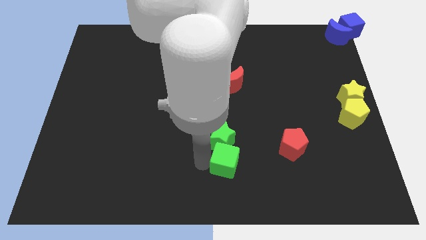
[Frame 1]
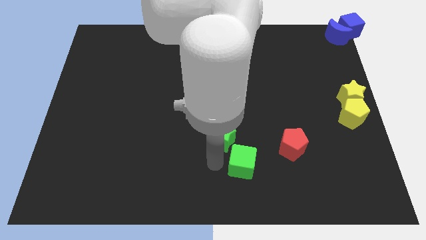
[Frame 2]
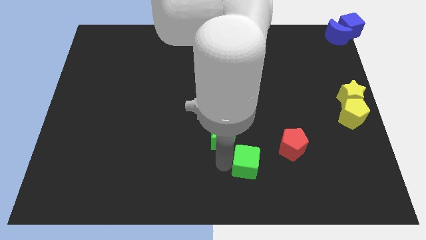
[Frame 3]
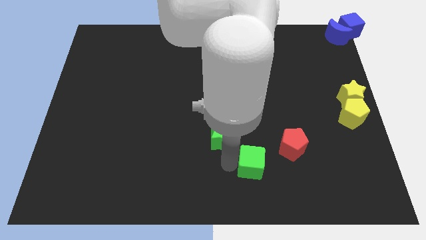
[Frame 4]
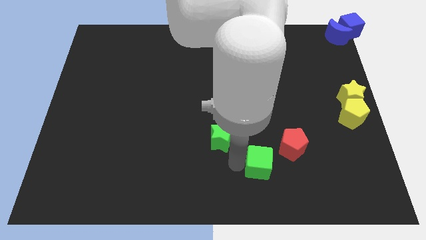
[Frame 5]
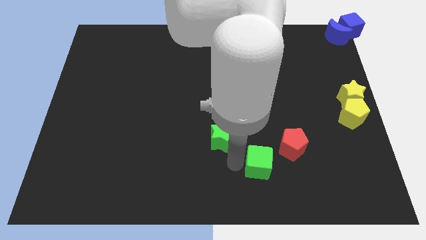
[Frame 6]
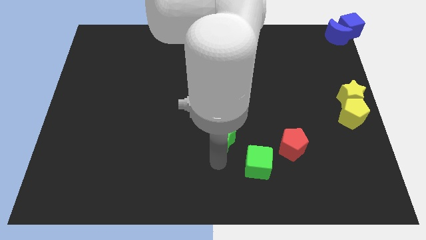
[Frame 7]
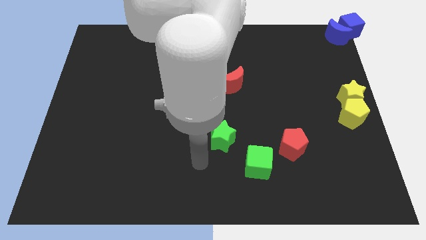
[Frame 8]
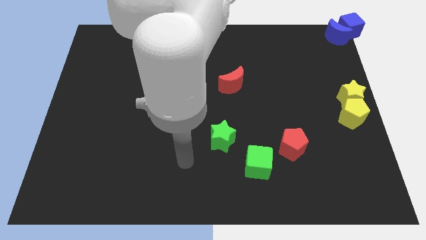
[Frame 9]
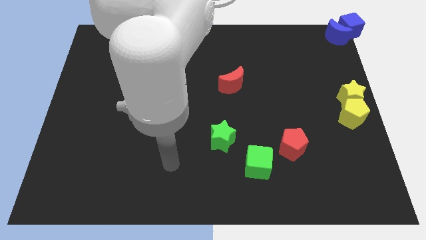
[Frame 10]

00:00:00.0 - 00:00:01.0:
place the green cube in between the green star and the red pentagon

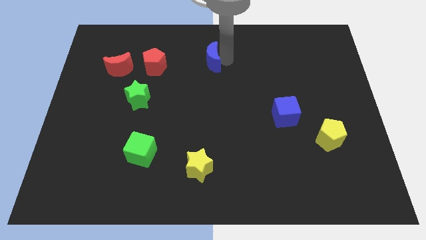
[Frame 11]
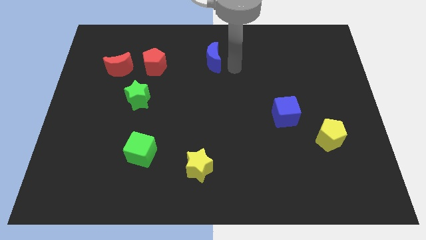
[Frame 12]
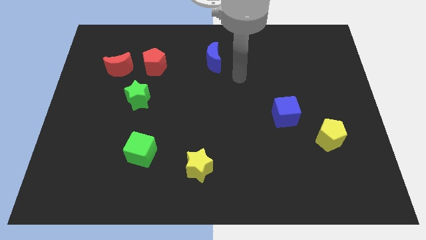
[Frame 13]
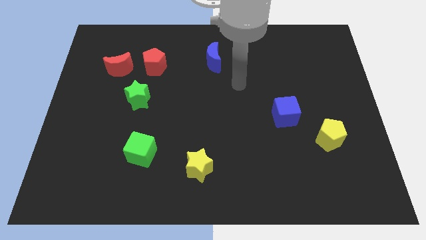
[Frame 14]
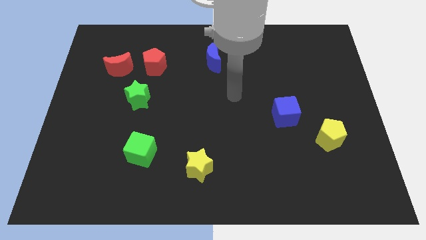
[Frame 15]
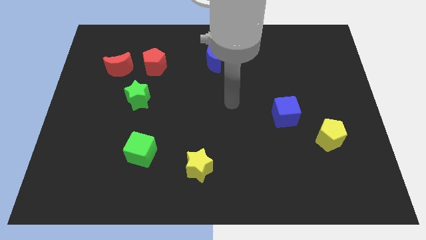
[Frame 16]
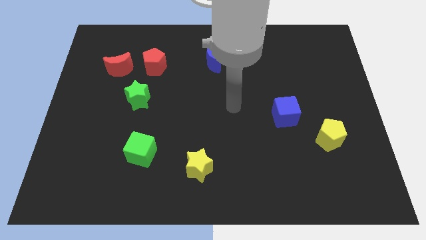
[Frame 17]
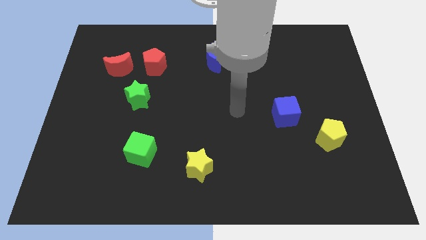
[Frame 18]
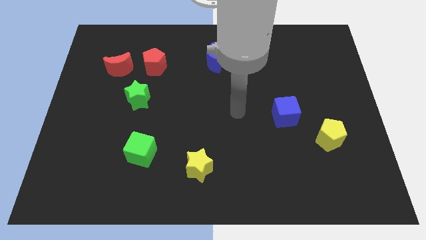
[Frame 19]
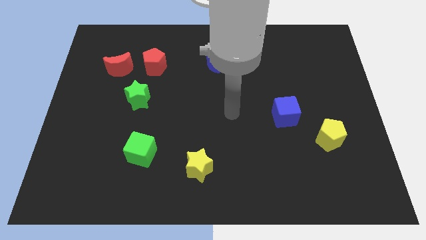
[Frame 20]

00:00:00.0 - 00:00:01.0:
point the arm at the center of the board

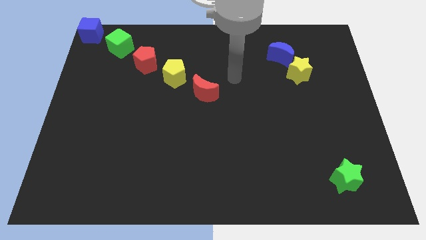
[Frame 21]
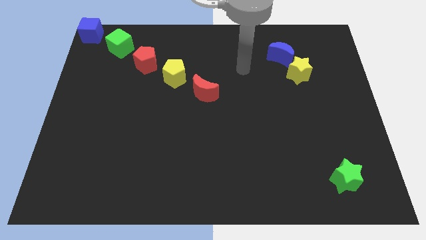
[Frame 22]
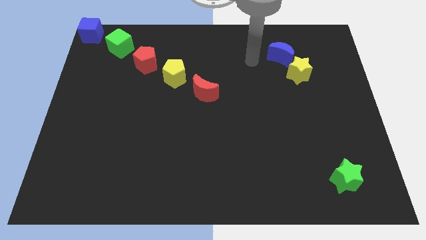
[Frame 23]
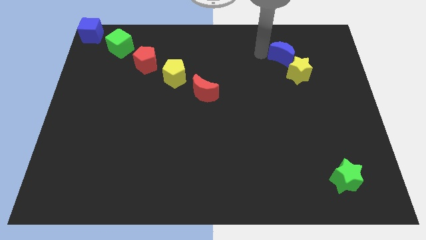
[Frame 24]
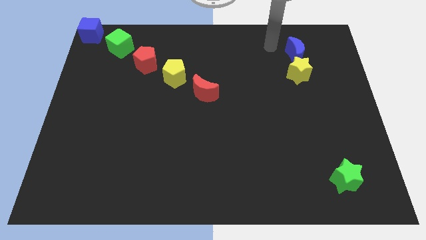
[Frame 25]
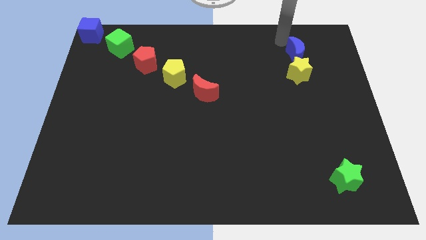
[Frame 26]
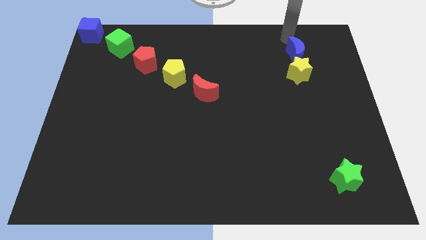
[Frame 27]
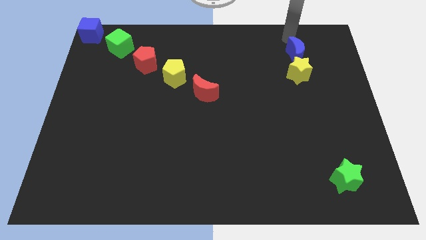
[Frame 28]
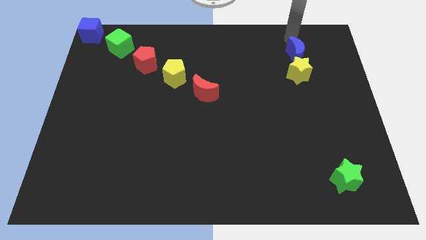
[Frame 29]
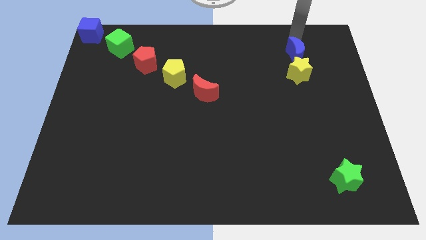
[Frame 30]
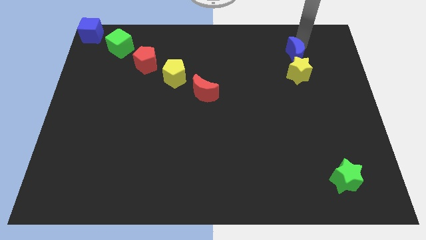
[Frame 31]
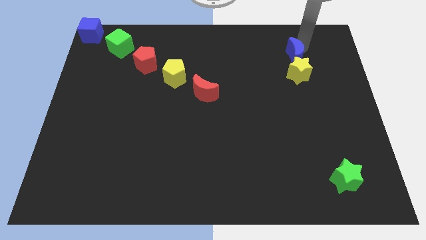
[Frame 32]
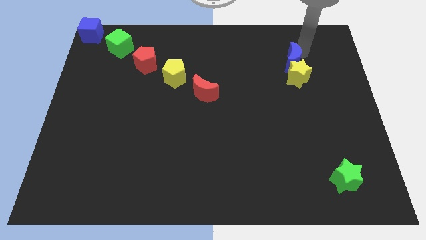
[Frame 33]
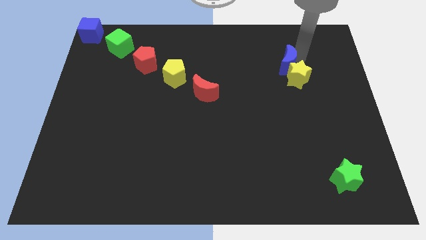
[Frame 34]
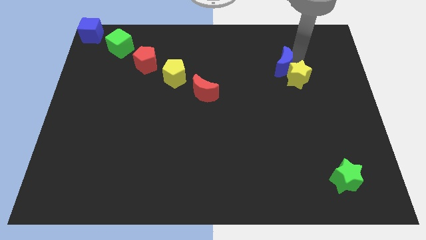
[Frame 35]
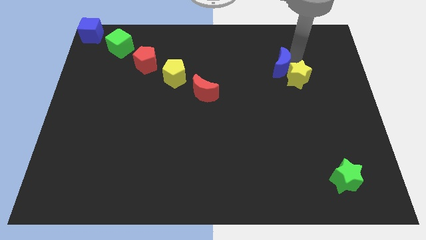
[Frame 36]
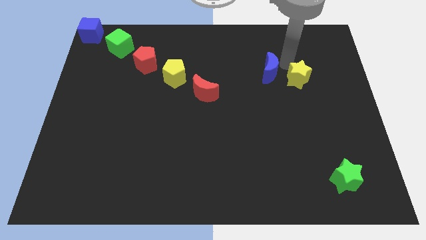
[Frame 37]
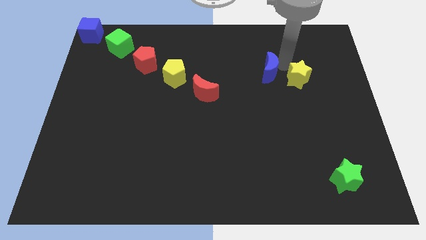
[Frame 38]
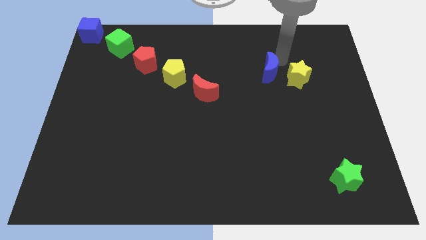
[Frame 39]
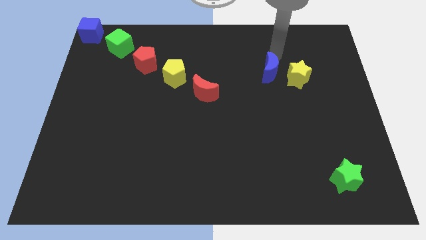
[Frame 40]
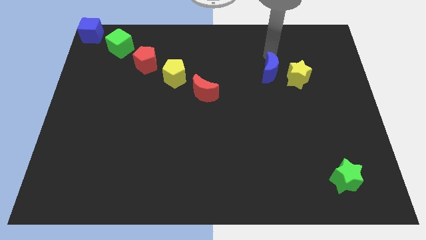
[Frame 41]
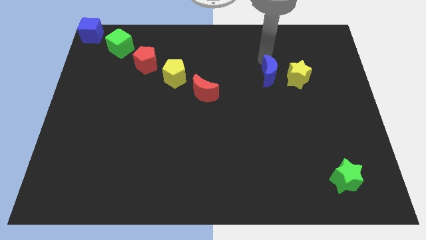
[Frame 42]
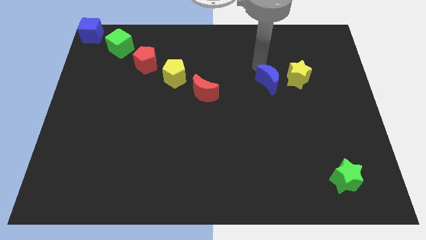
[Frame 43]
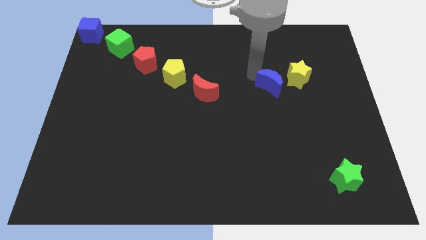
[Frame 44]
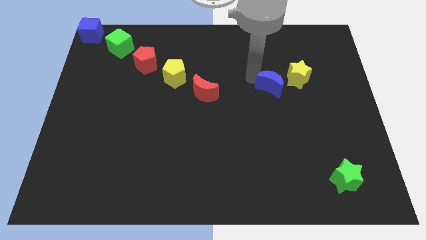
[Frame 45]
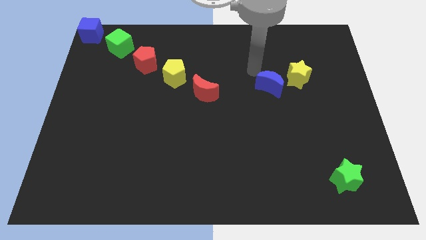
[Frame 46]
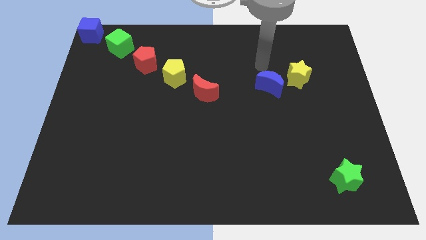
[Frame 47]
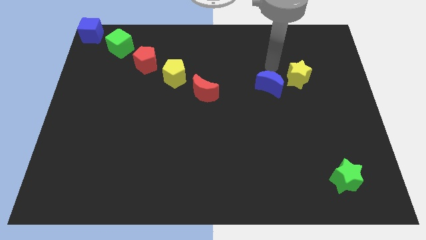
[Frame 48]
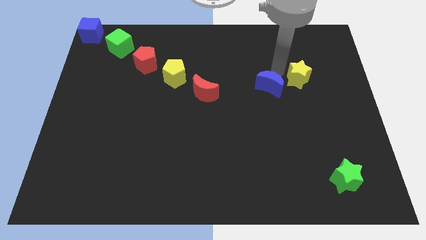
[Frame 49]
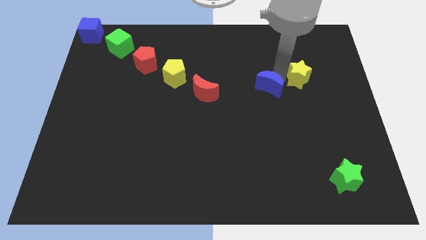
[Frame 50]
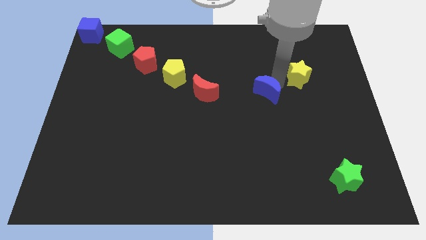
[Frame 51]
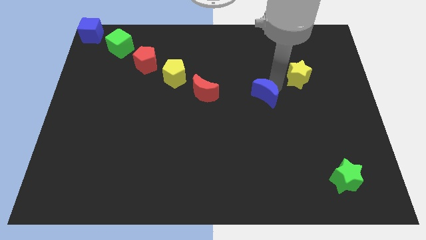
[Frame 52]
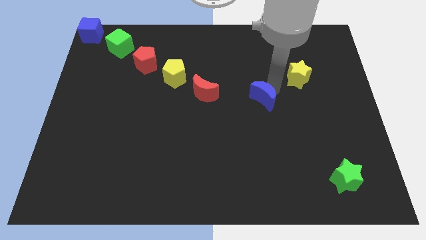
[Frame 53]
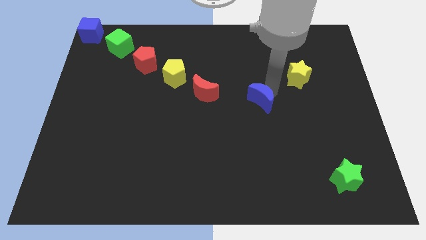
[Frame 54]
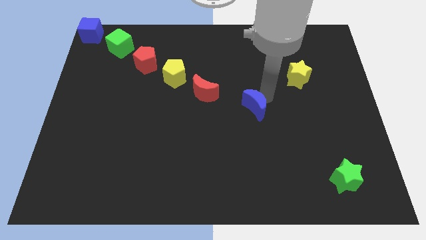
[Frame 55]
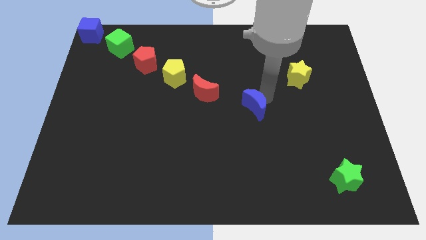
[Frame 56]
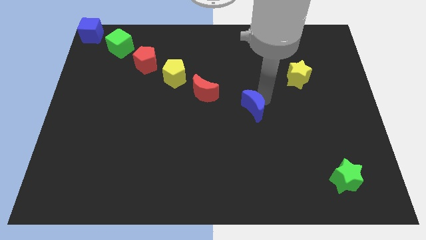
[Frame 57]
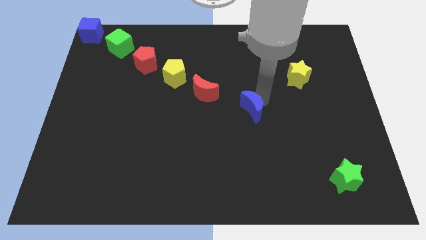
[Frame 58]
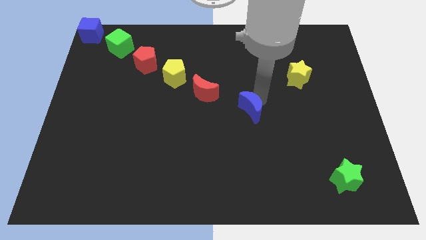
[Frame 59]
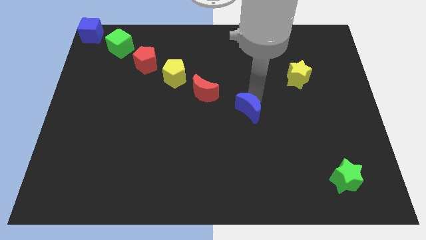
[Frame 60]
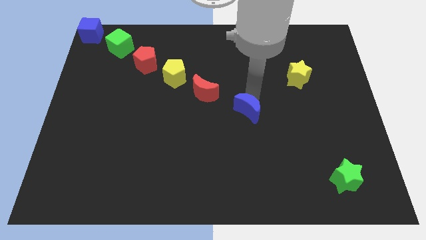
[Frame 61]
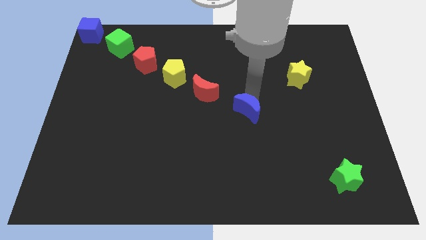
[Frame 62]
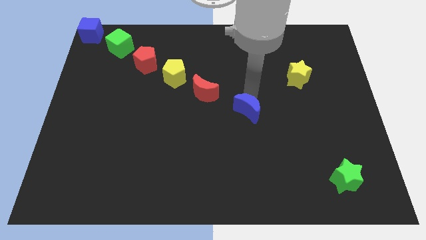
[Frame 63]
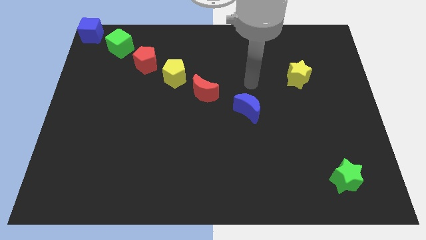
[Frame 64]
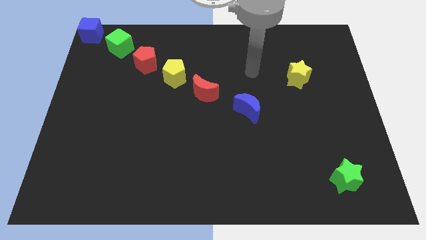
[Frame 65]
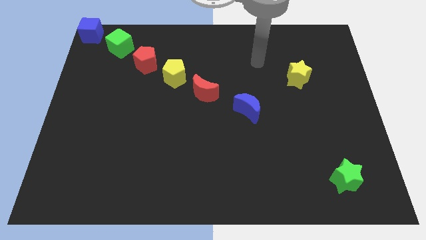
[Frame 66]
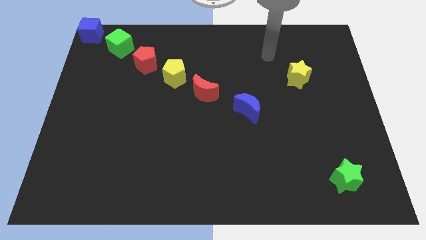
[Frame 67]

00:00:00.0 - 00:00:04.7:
place the blue moon diagonally to the right of the red moon

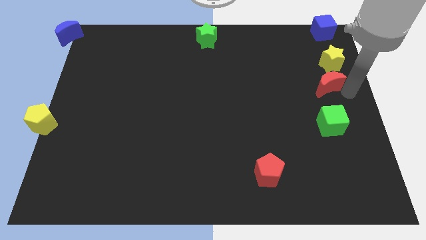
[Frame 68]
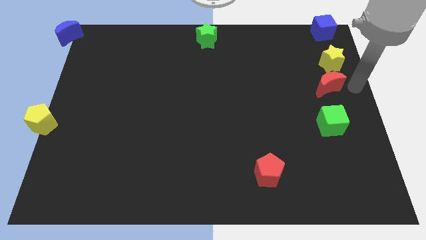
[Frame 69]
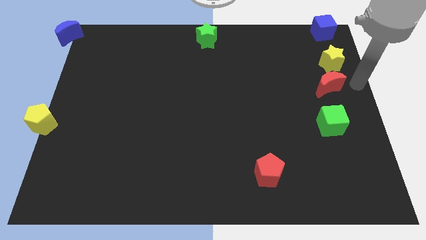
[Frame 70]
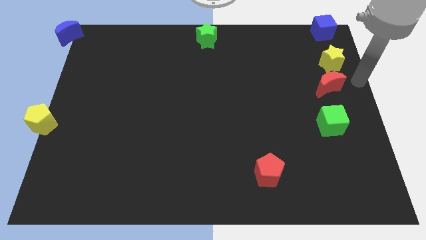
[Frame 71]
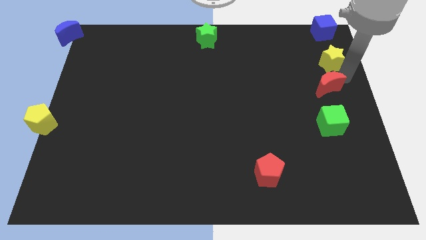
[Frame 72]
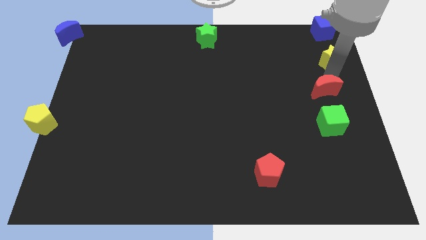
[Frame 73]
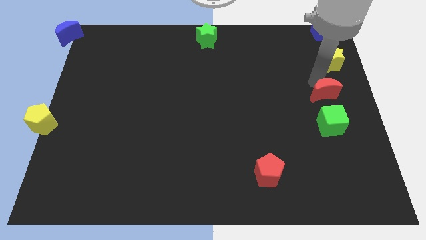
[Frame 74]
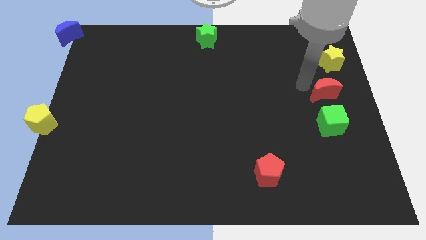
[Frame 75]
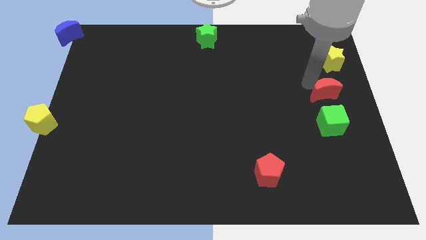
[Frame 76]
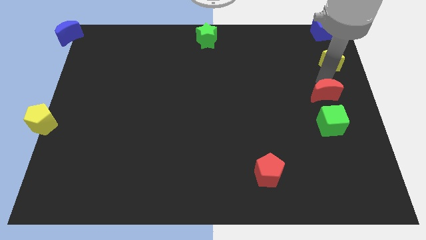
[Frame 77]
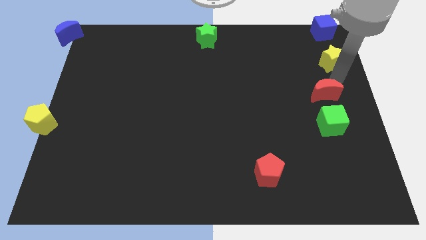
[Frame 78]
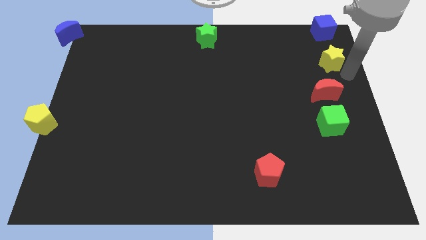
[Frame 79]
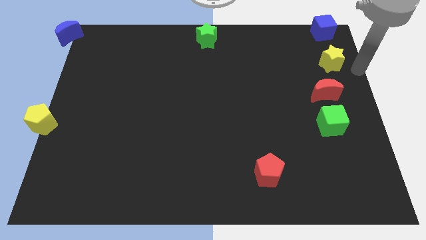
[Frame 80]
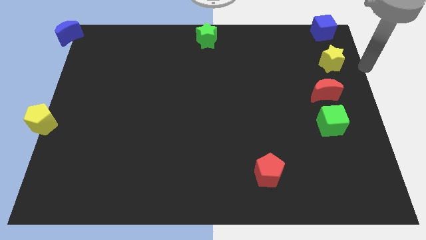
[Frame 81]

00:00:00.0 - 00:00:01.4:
touch the red crescent

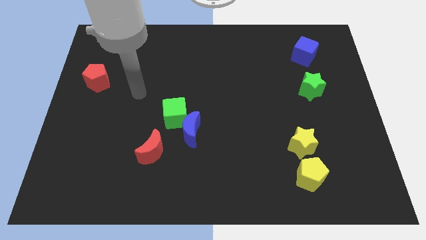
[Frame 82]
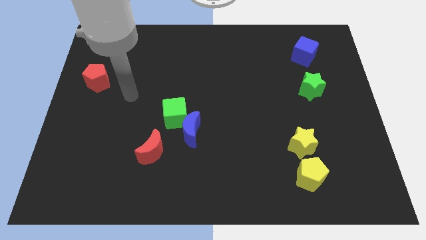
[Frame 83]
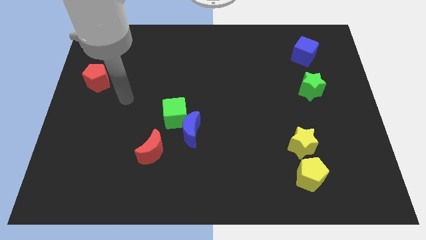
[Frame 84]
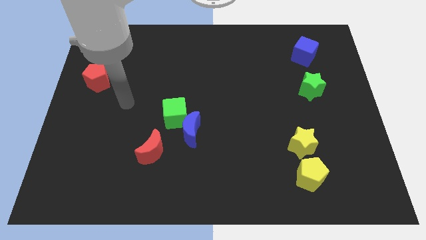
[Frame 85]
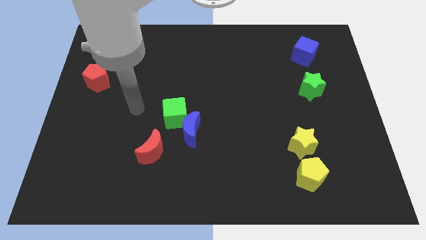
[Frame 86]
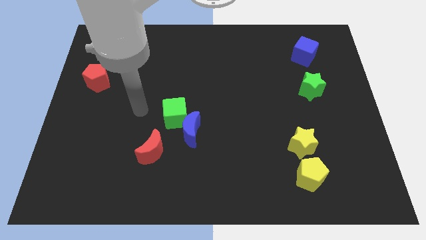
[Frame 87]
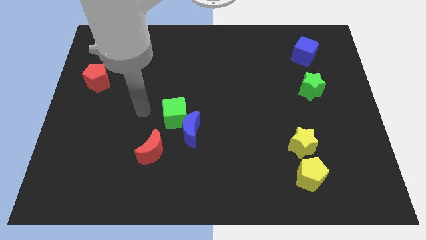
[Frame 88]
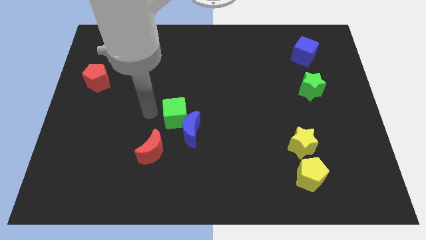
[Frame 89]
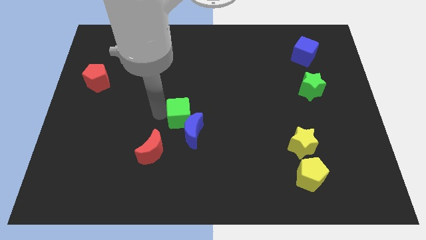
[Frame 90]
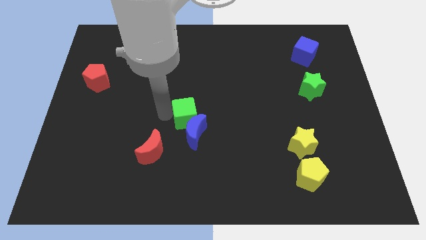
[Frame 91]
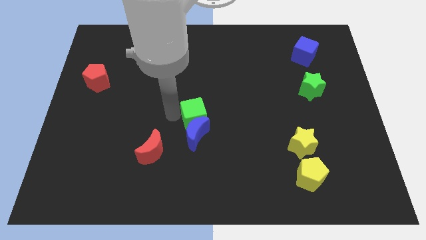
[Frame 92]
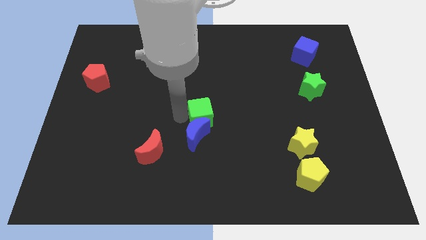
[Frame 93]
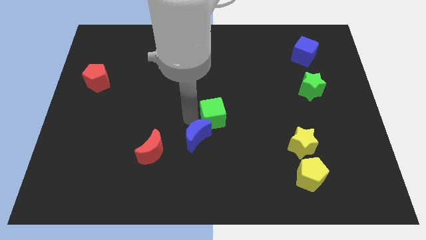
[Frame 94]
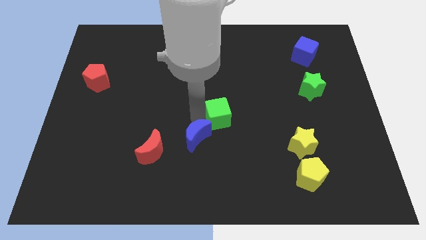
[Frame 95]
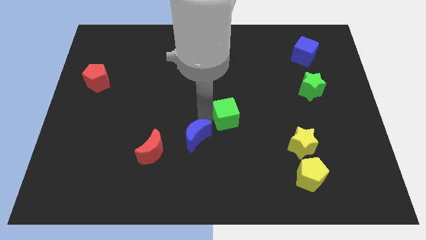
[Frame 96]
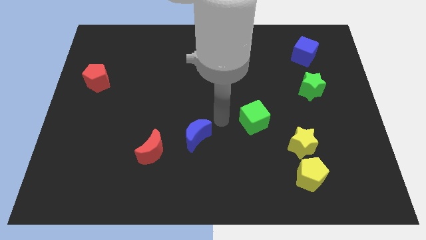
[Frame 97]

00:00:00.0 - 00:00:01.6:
separate the green cube and blue moon
